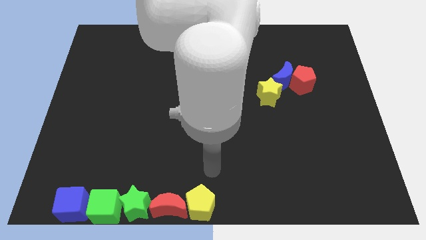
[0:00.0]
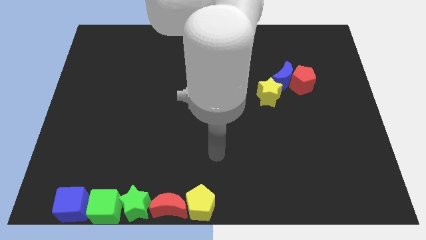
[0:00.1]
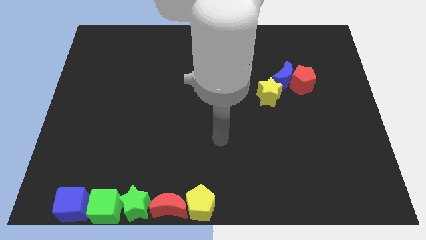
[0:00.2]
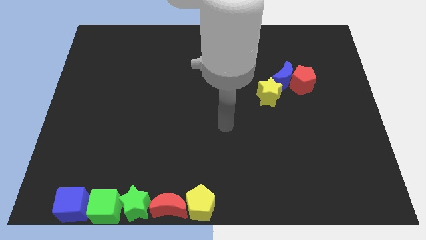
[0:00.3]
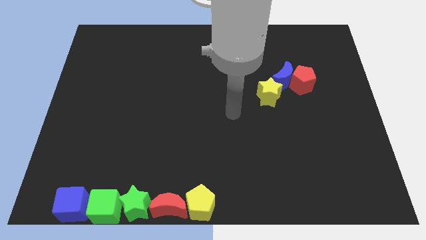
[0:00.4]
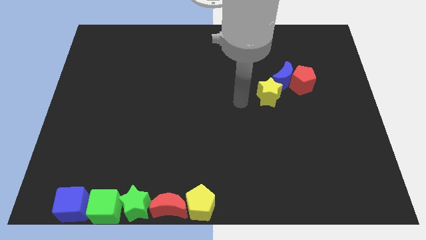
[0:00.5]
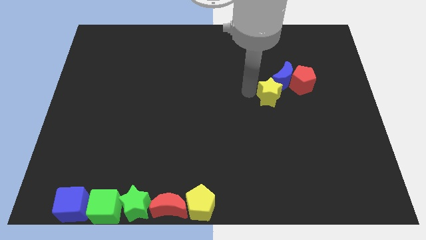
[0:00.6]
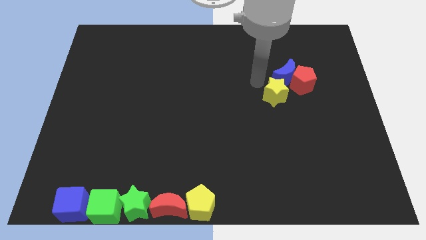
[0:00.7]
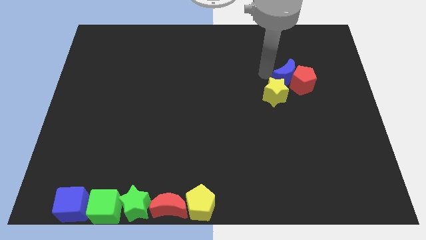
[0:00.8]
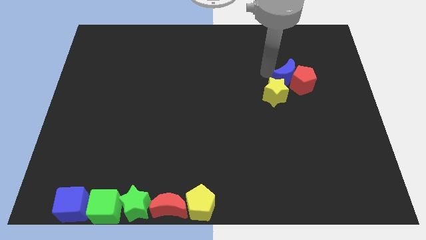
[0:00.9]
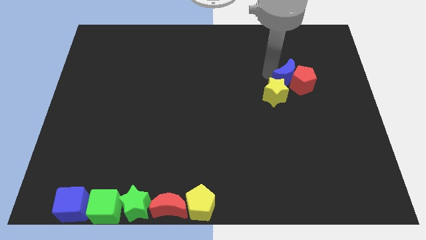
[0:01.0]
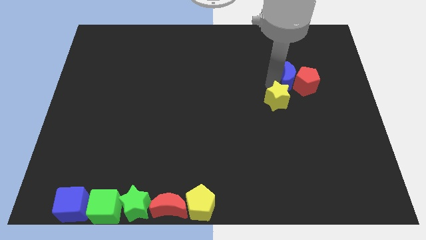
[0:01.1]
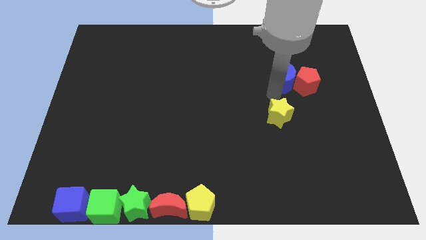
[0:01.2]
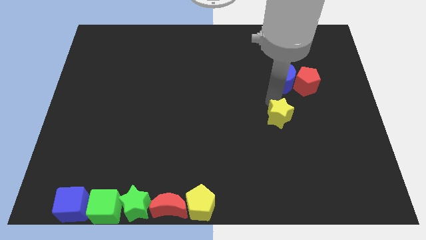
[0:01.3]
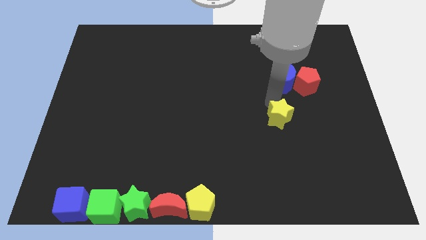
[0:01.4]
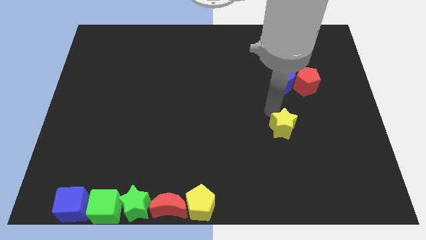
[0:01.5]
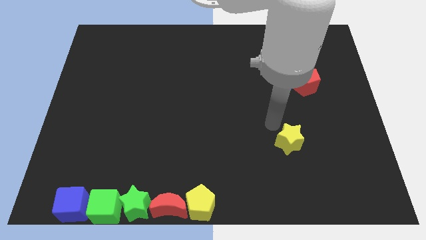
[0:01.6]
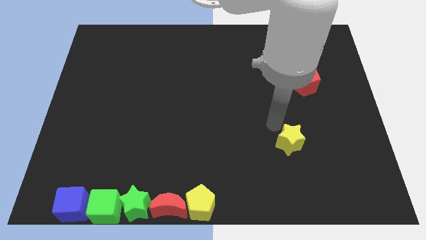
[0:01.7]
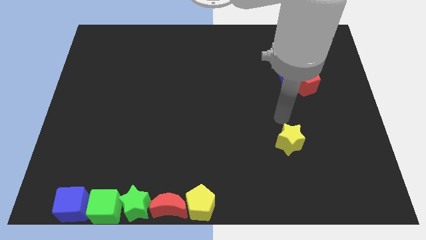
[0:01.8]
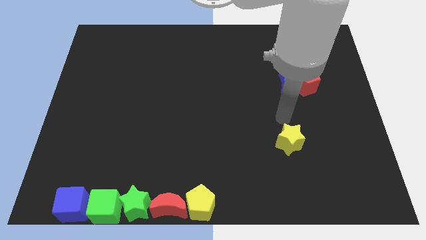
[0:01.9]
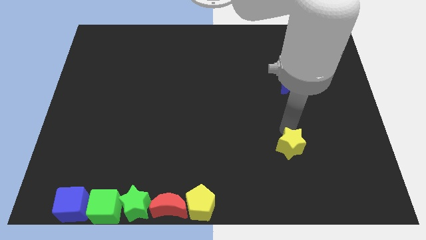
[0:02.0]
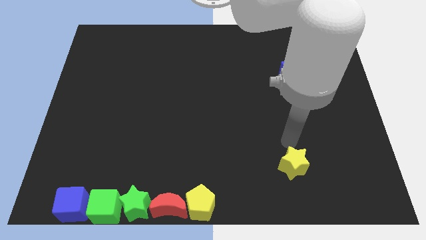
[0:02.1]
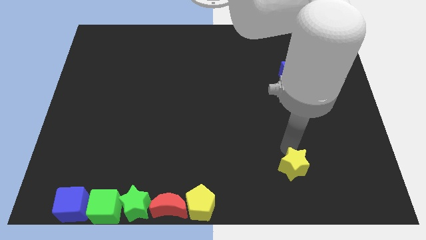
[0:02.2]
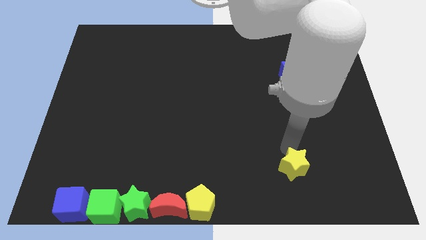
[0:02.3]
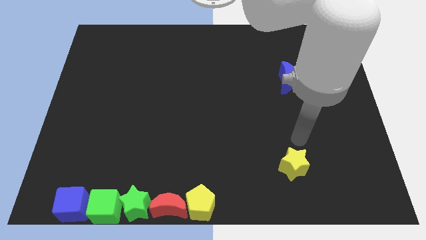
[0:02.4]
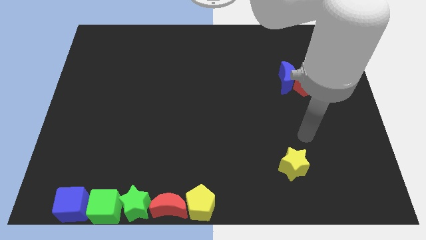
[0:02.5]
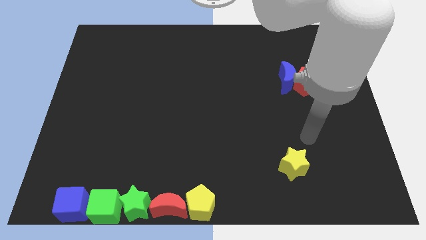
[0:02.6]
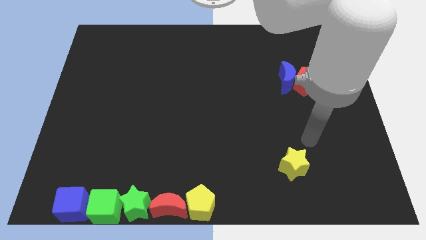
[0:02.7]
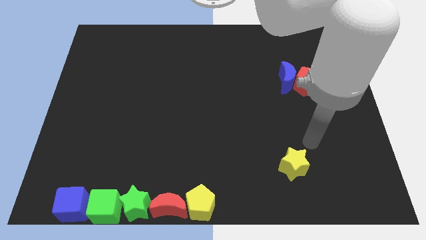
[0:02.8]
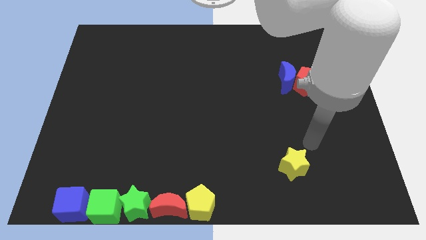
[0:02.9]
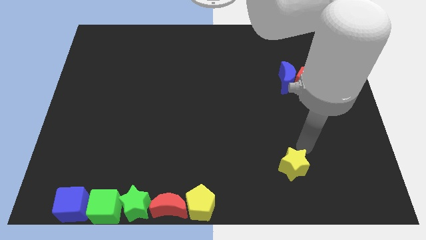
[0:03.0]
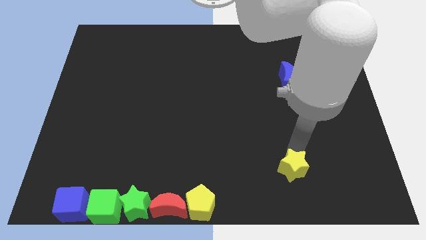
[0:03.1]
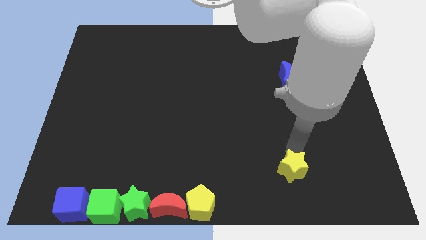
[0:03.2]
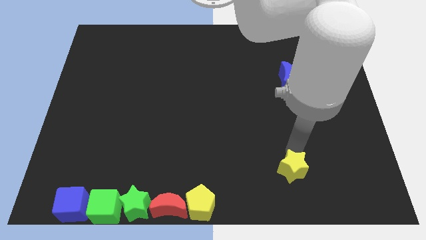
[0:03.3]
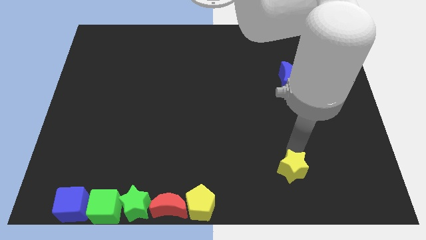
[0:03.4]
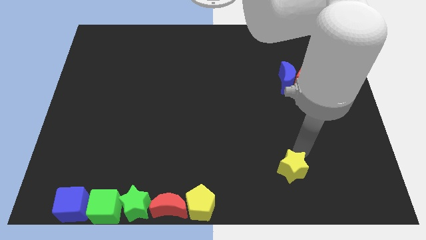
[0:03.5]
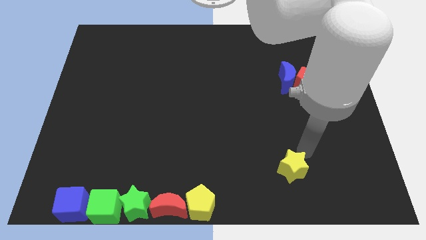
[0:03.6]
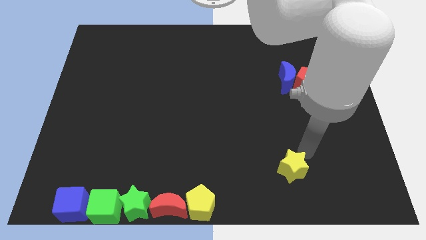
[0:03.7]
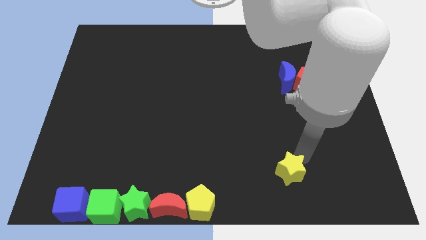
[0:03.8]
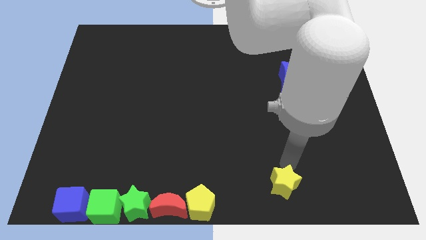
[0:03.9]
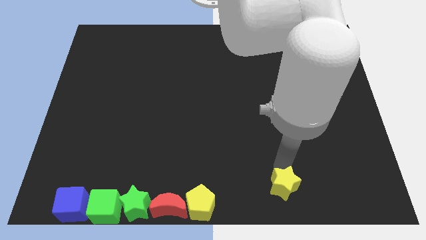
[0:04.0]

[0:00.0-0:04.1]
separate the yellow star from the red pentagon and the blue crescent

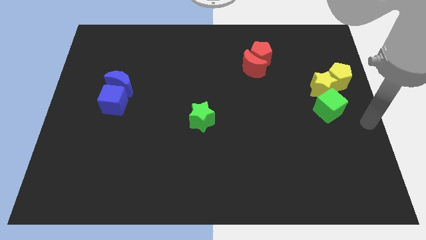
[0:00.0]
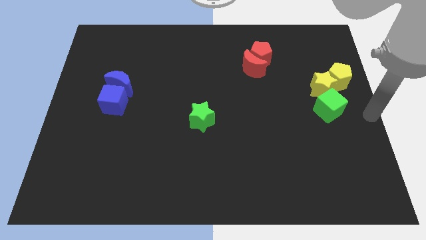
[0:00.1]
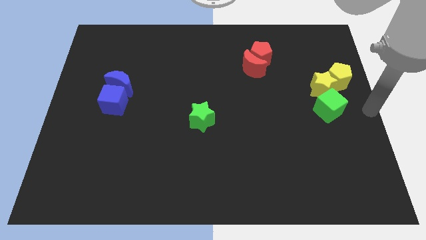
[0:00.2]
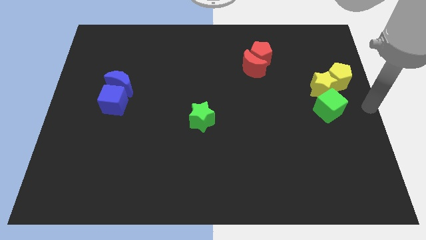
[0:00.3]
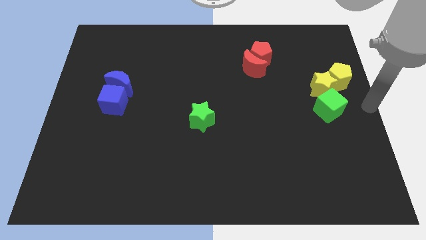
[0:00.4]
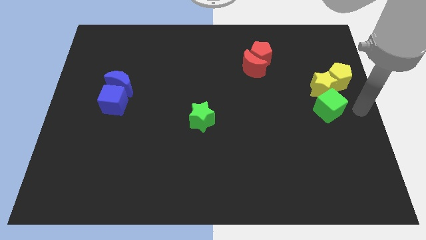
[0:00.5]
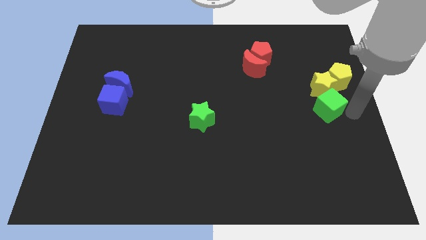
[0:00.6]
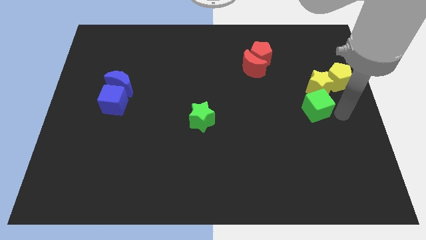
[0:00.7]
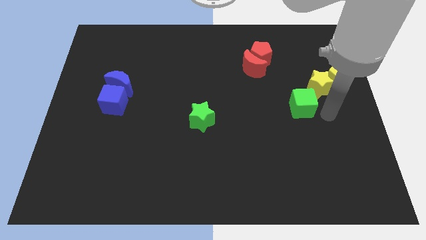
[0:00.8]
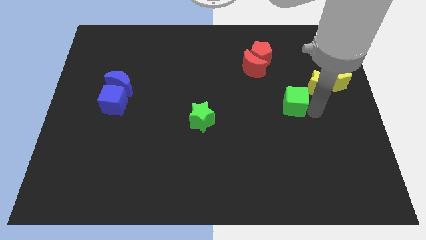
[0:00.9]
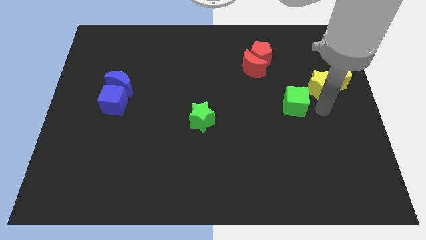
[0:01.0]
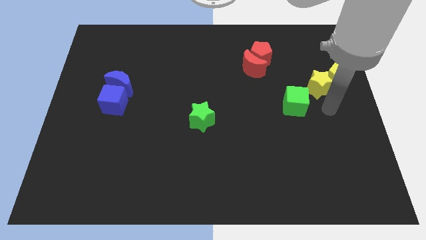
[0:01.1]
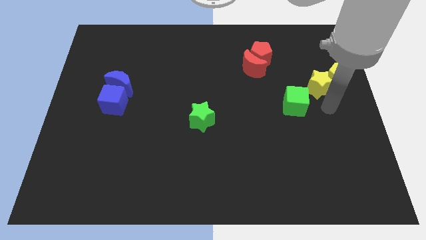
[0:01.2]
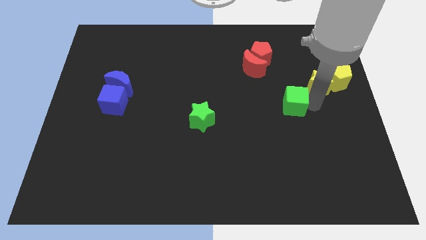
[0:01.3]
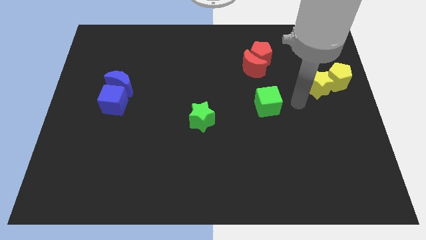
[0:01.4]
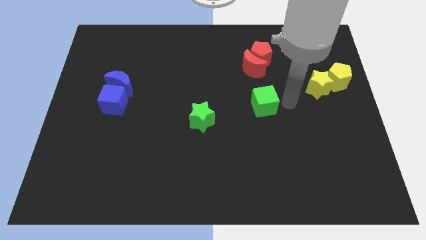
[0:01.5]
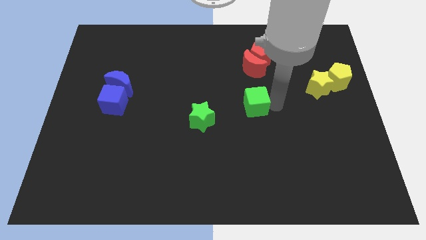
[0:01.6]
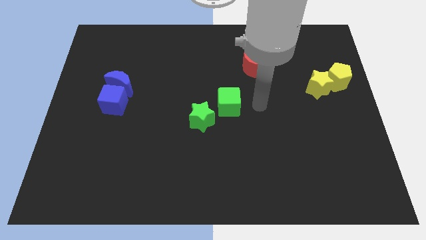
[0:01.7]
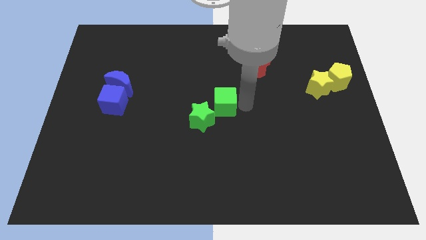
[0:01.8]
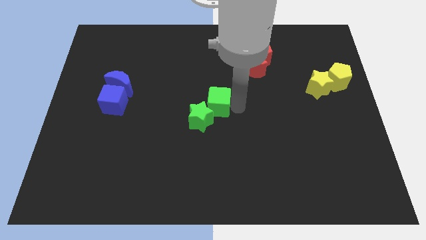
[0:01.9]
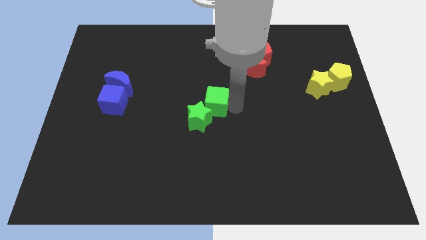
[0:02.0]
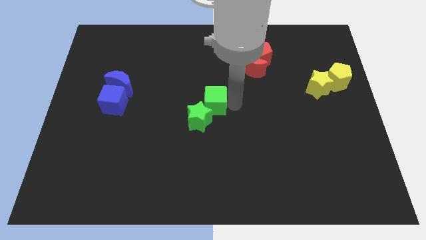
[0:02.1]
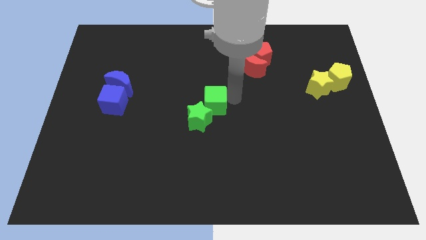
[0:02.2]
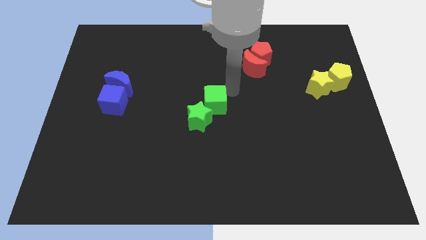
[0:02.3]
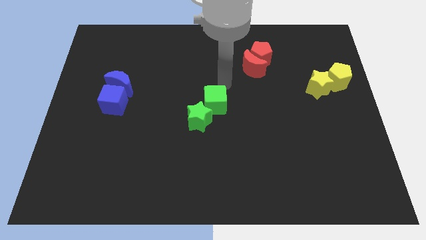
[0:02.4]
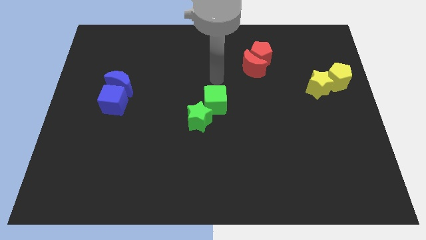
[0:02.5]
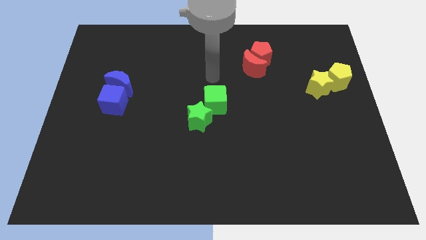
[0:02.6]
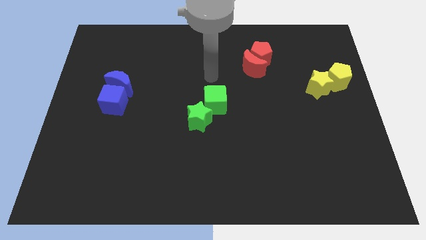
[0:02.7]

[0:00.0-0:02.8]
move the green cube into the green star

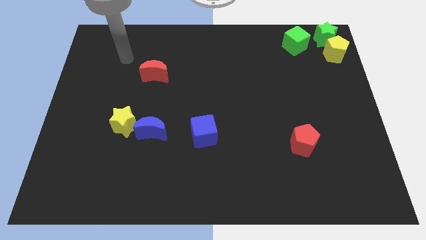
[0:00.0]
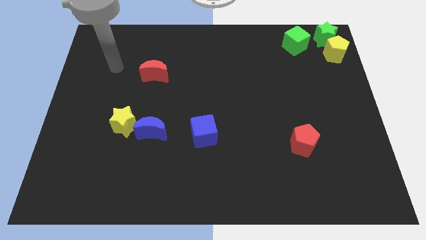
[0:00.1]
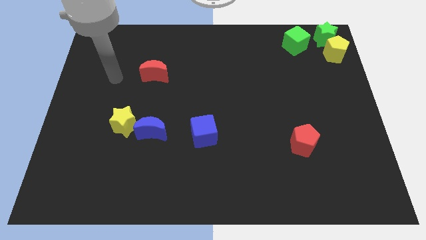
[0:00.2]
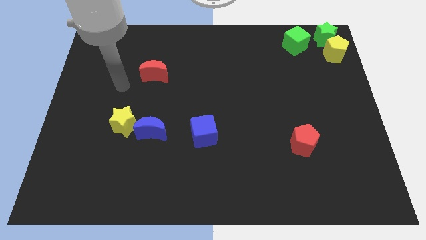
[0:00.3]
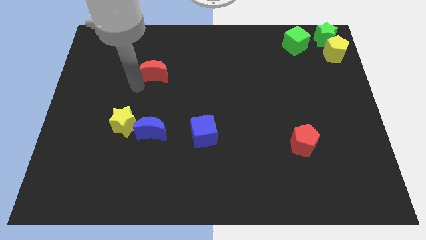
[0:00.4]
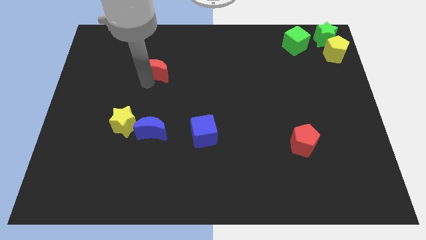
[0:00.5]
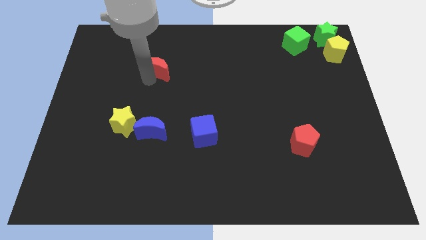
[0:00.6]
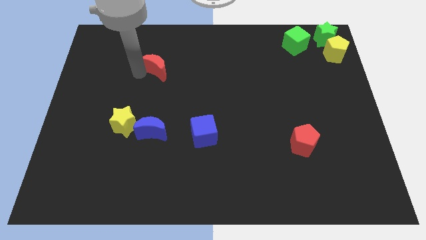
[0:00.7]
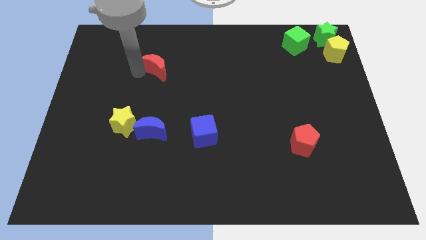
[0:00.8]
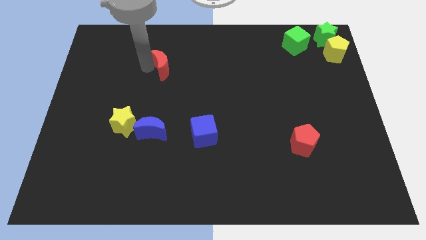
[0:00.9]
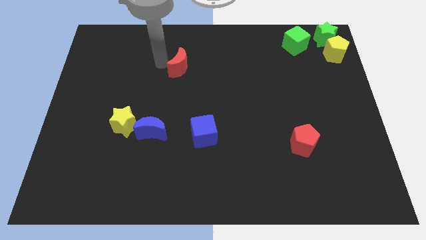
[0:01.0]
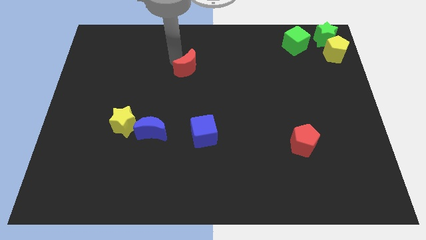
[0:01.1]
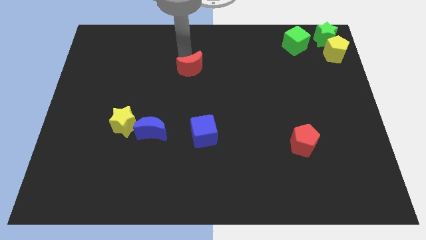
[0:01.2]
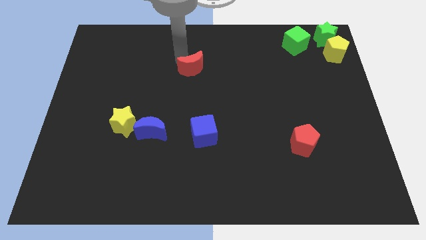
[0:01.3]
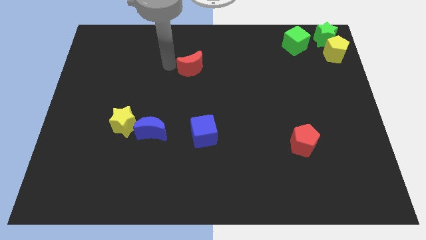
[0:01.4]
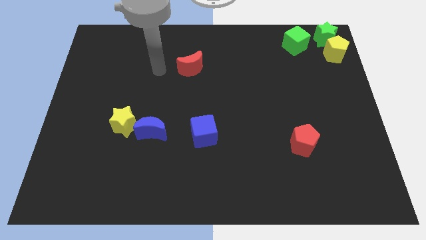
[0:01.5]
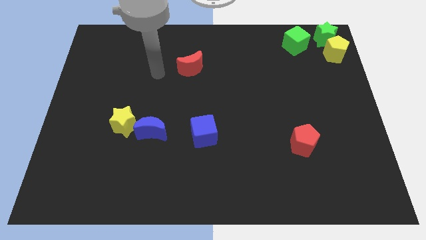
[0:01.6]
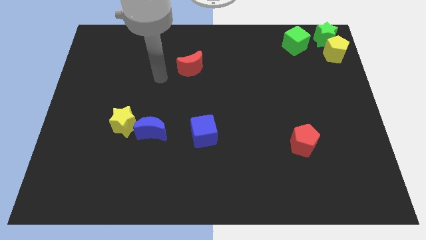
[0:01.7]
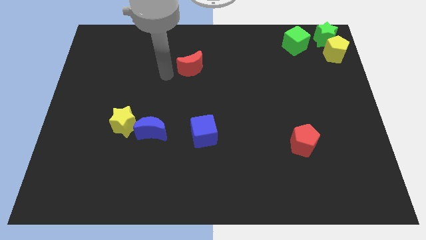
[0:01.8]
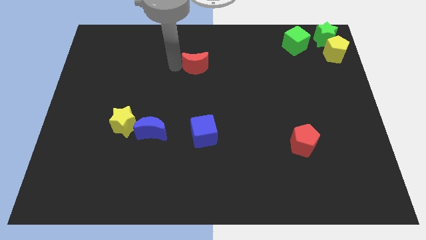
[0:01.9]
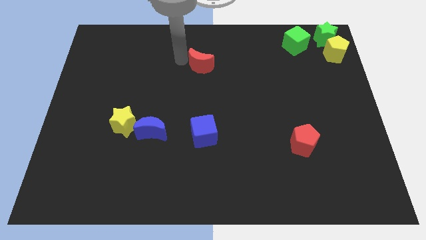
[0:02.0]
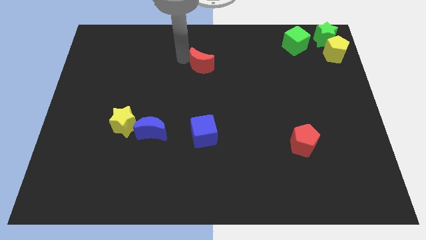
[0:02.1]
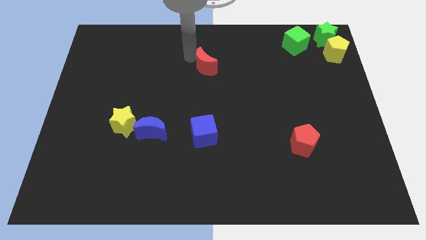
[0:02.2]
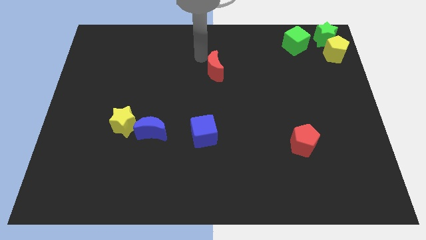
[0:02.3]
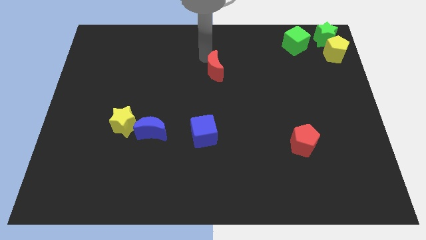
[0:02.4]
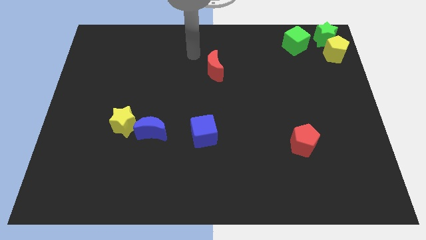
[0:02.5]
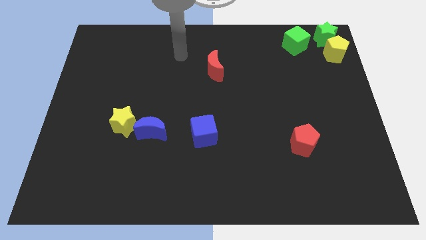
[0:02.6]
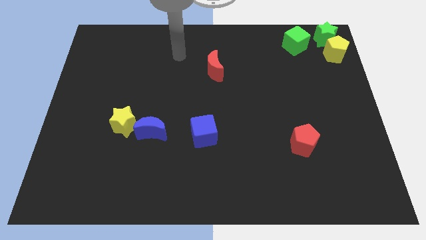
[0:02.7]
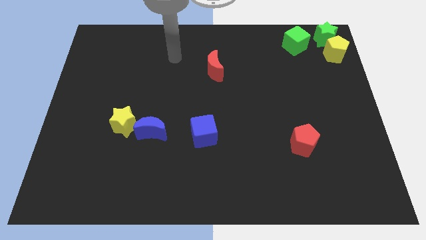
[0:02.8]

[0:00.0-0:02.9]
move the red moon top center of the board
